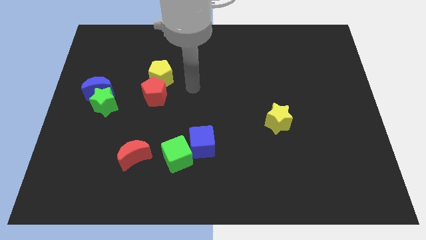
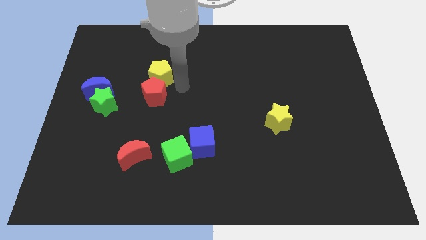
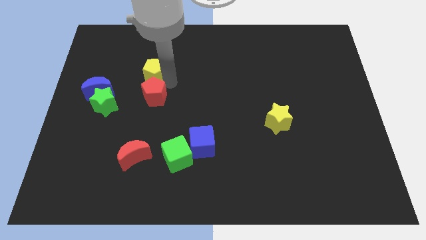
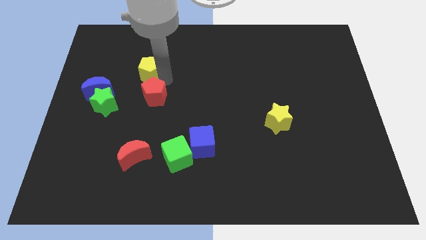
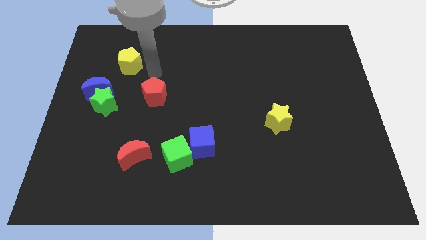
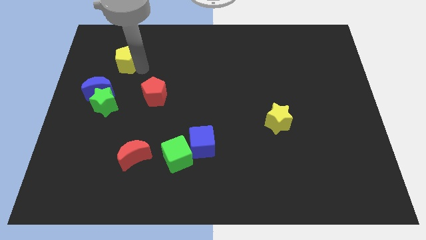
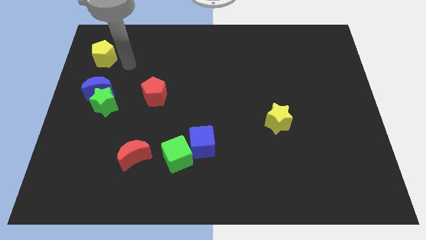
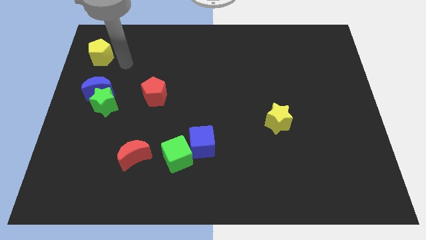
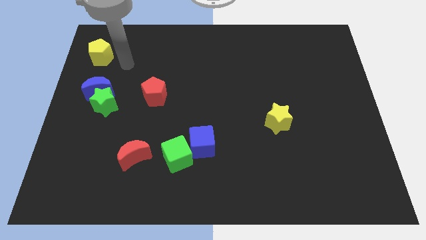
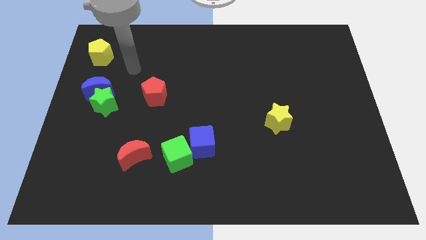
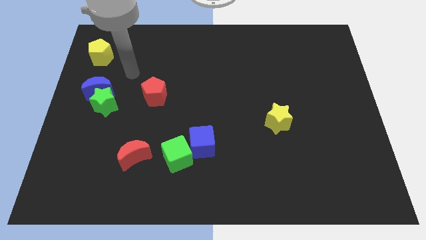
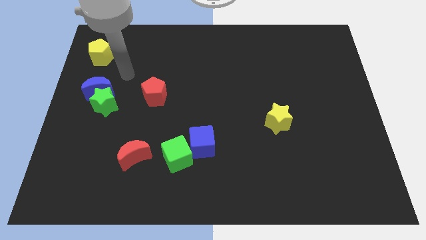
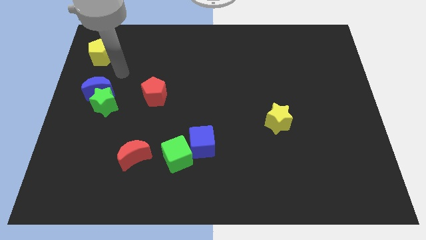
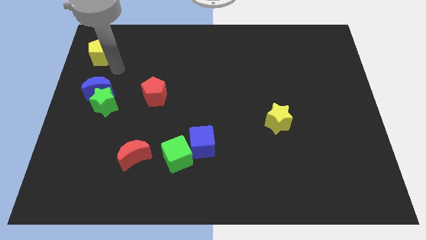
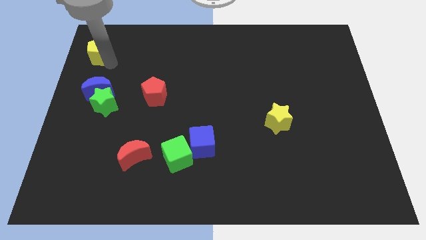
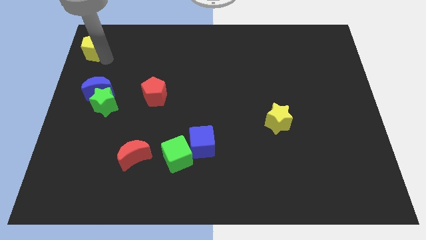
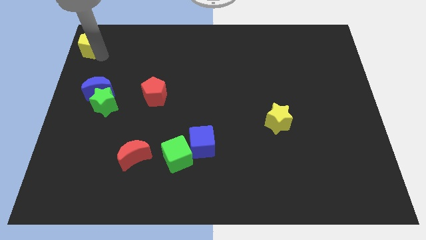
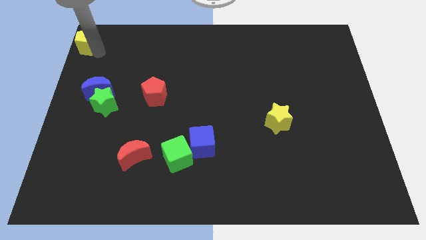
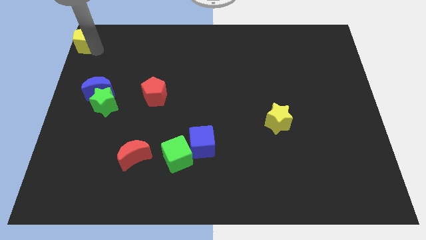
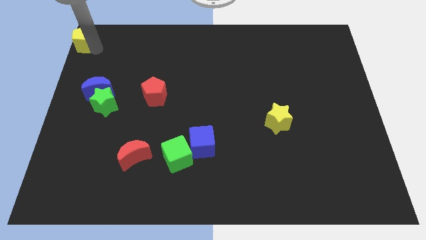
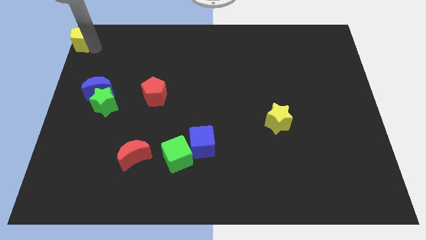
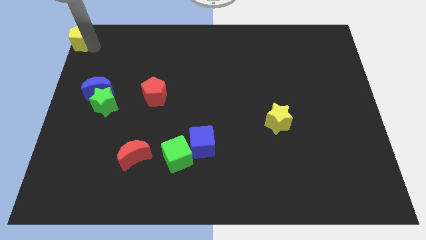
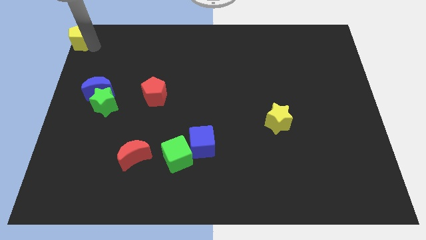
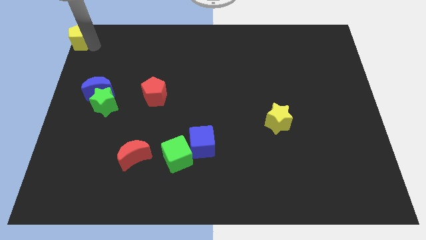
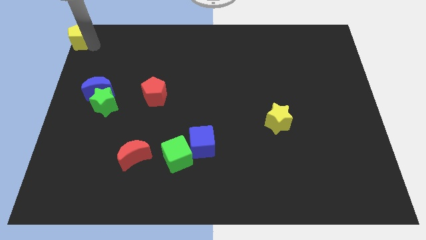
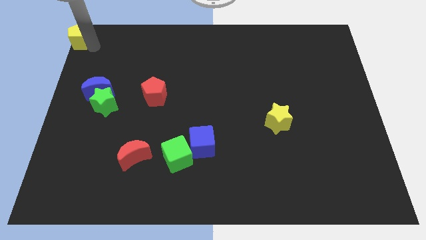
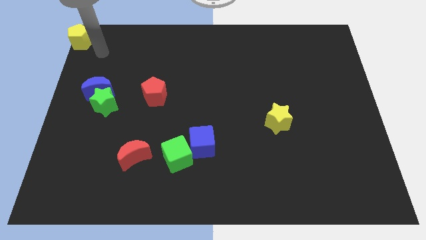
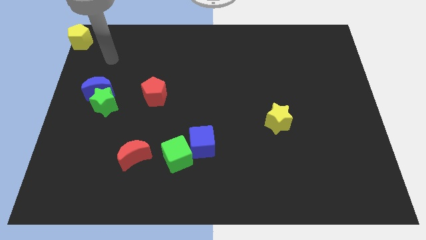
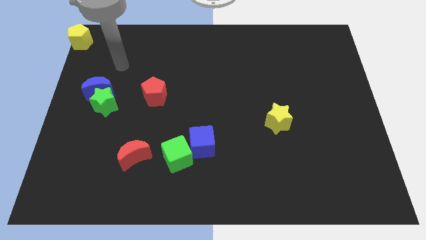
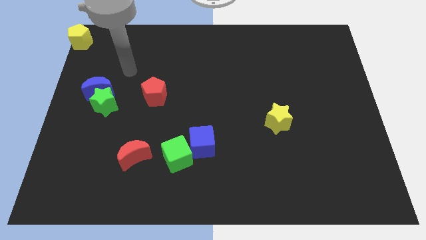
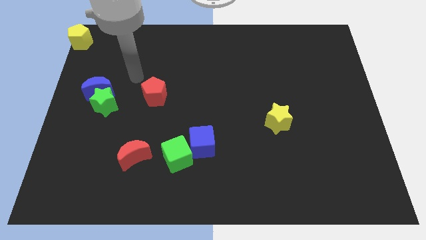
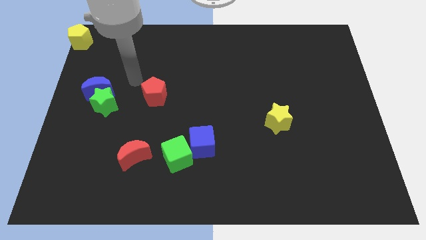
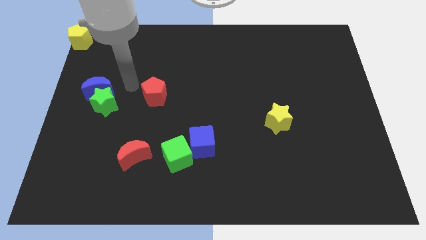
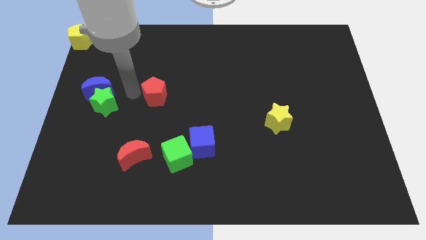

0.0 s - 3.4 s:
place the yellow pentagon at the top left corner of the board

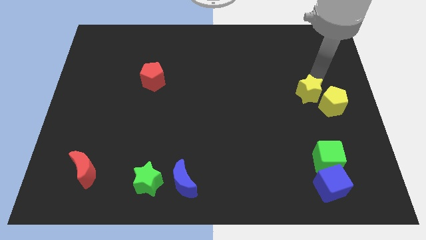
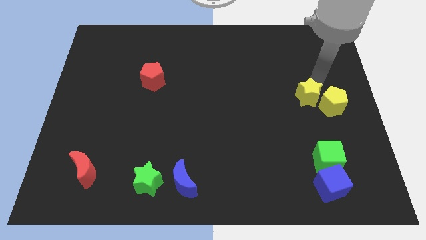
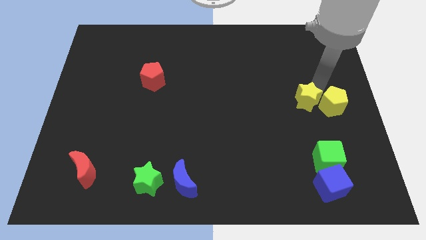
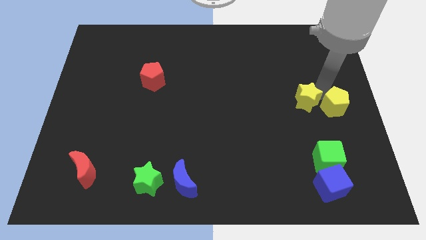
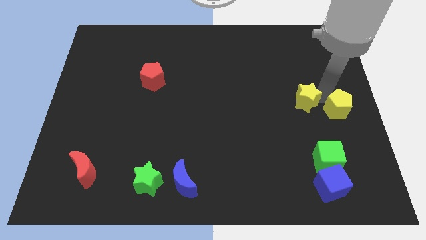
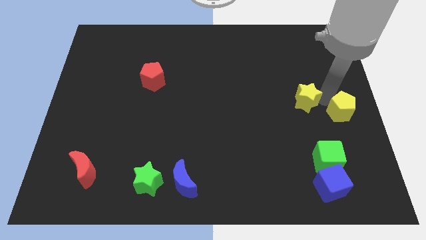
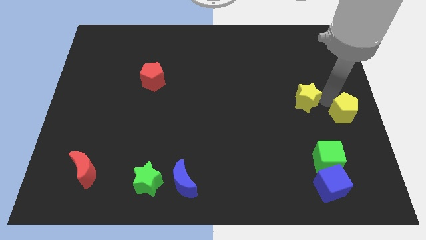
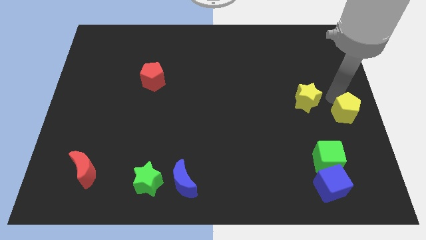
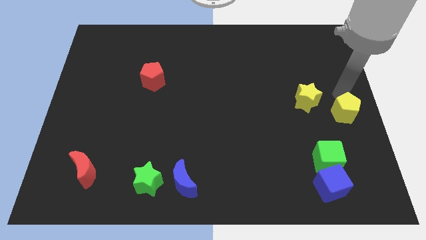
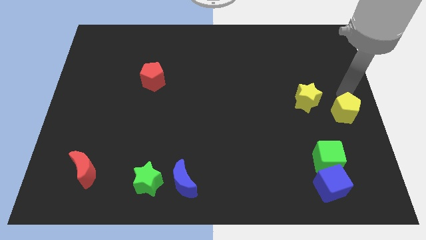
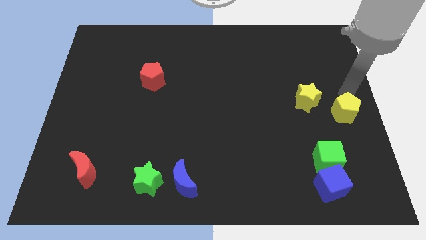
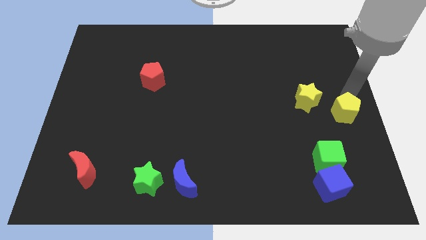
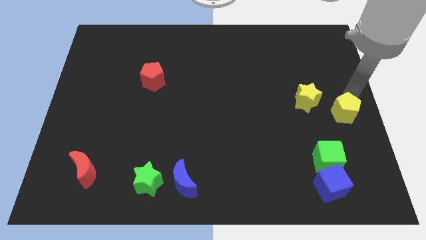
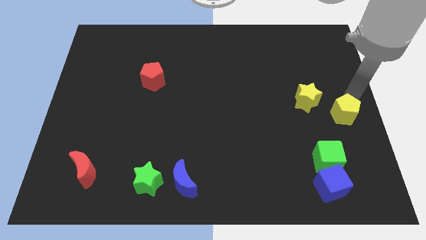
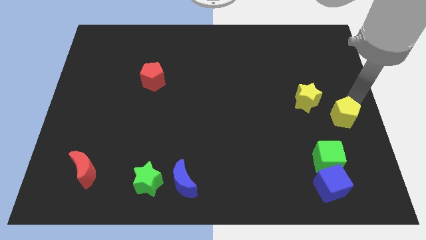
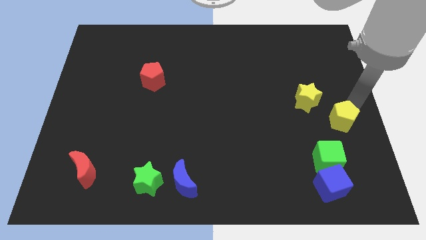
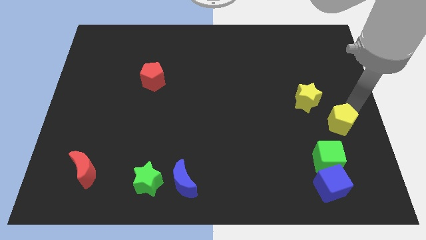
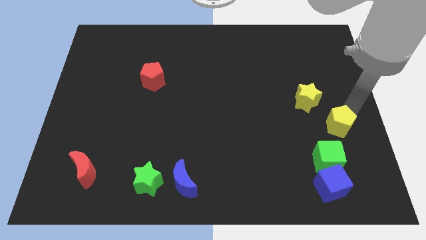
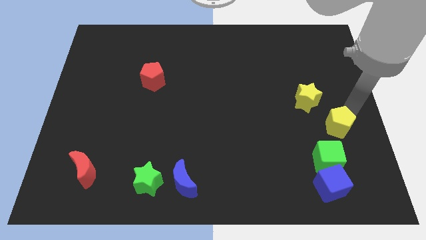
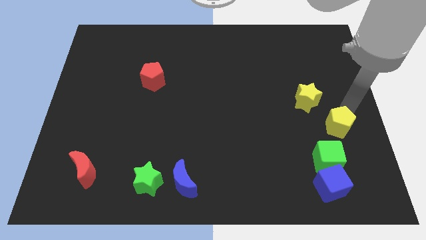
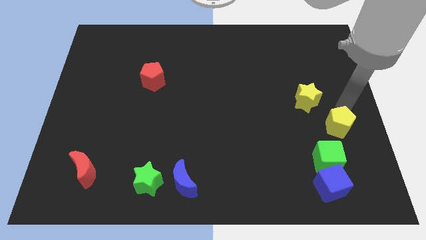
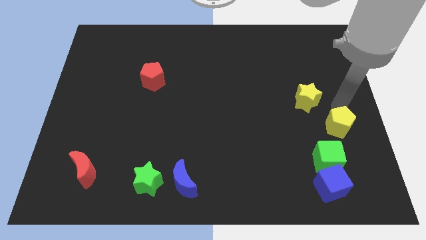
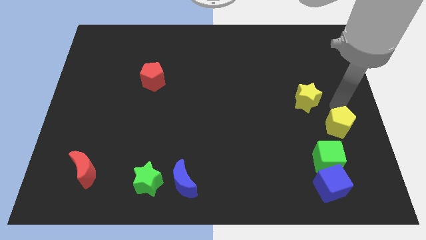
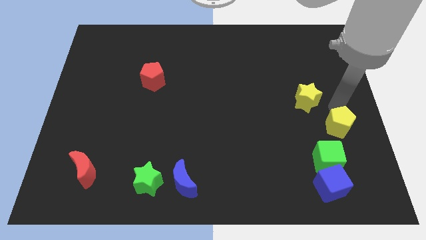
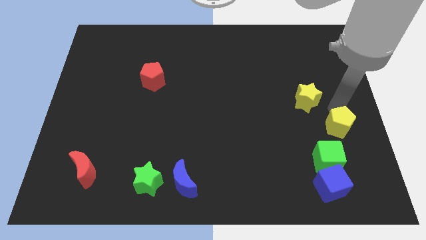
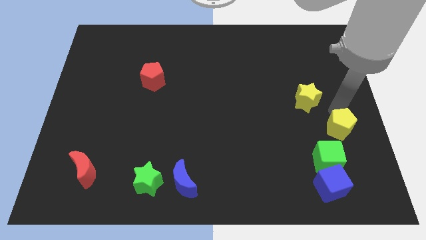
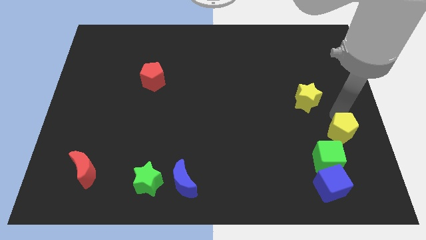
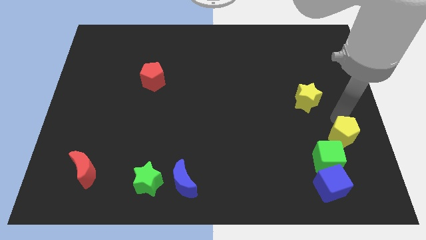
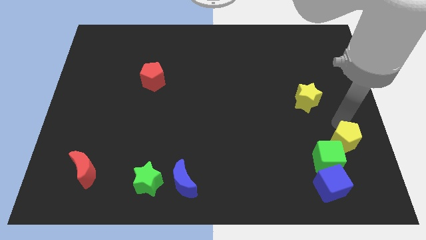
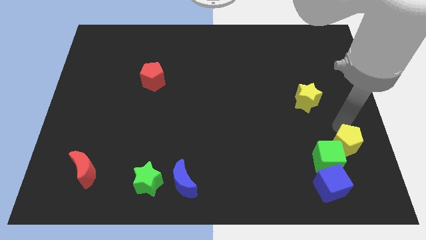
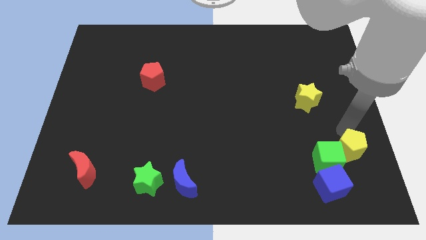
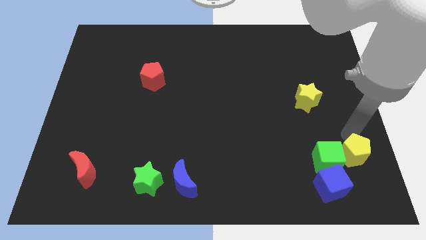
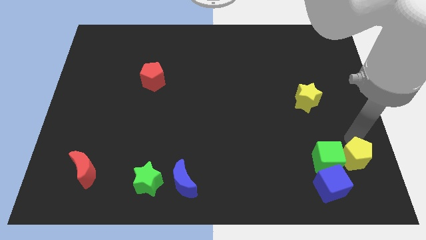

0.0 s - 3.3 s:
place the yellow pentagon right to the green cube

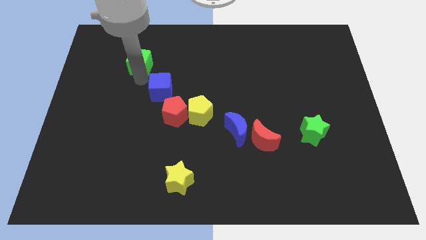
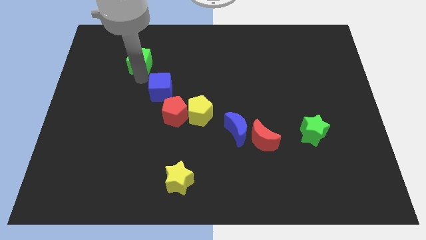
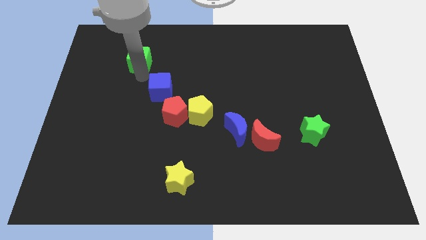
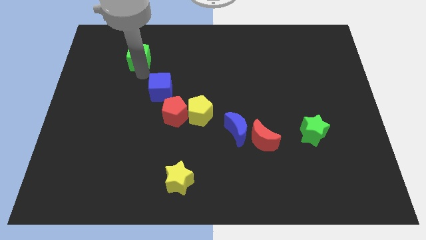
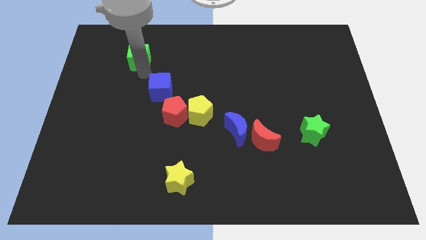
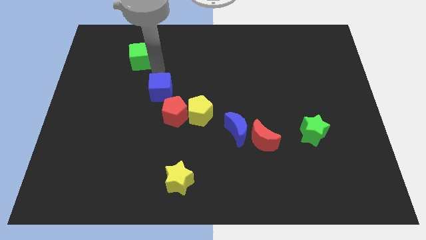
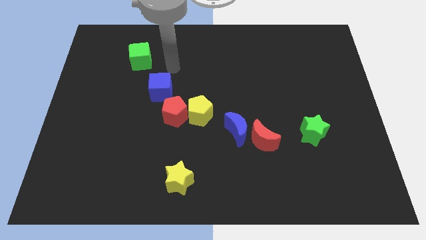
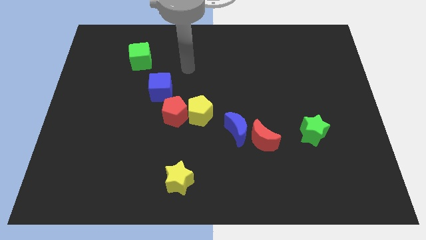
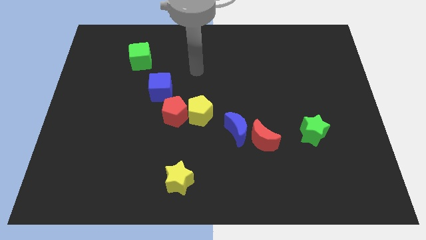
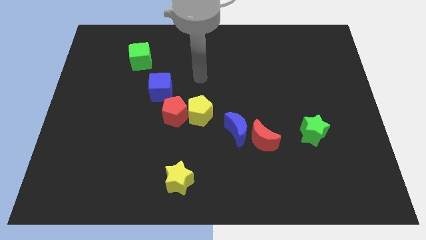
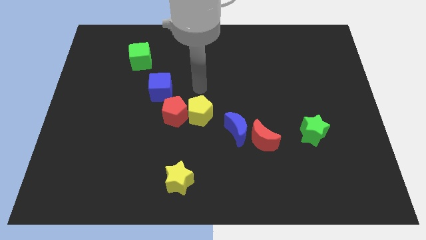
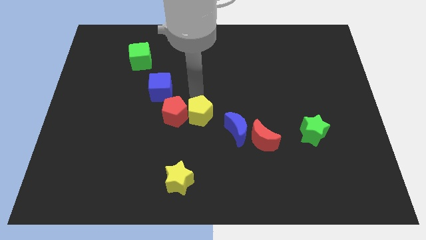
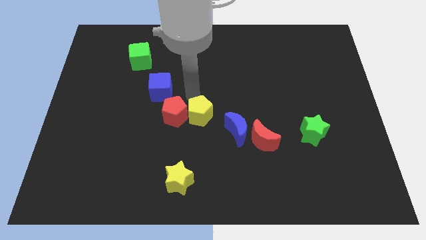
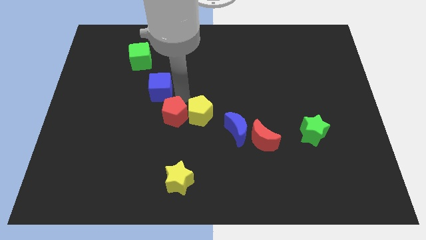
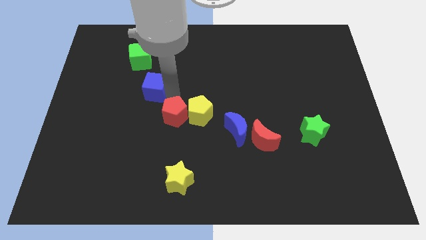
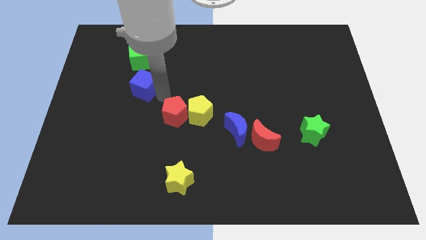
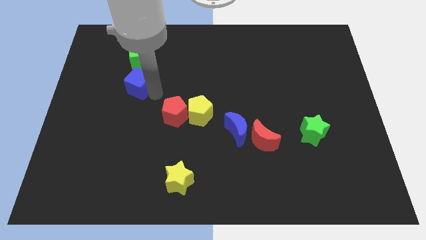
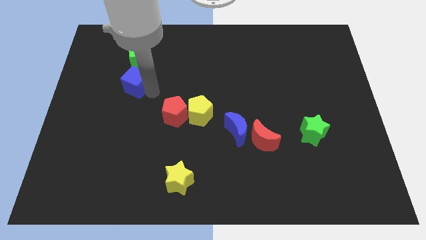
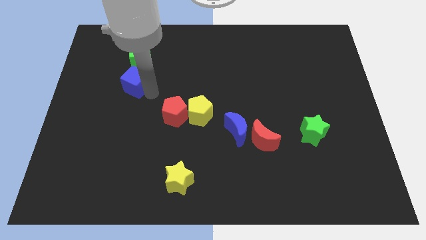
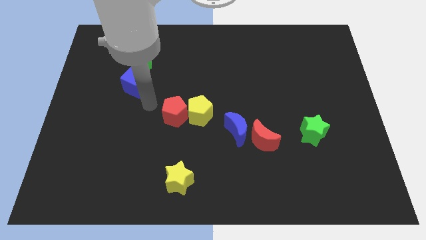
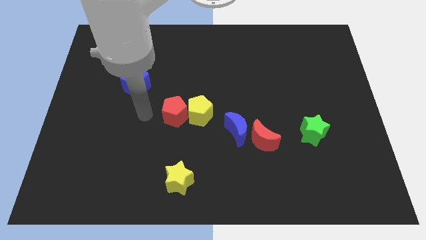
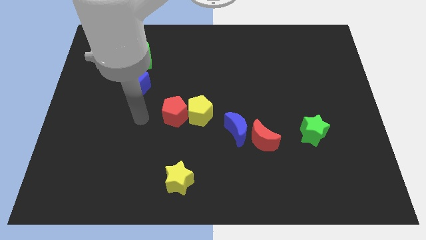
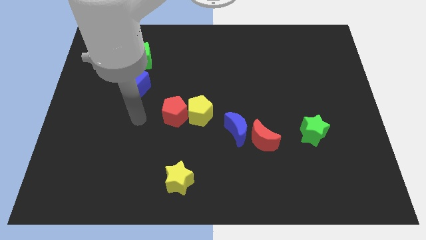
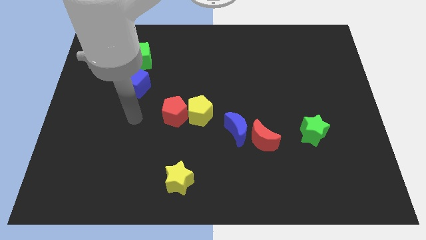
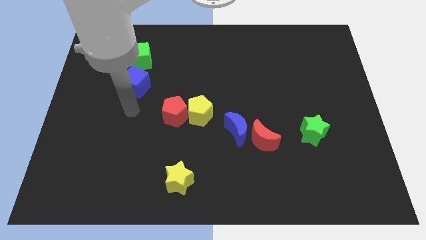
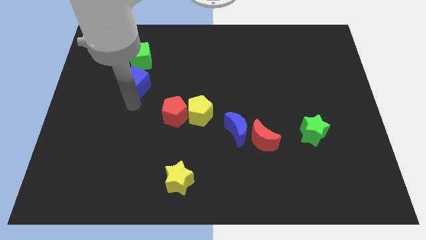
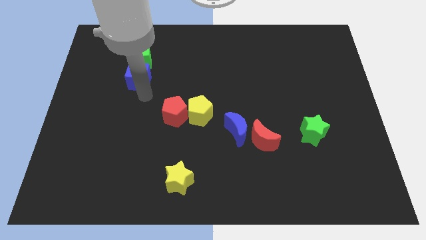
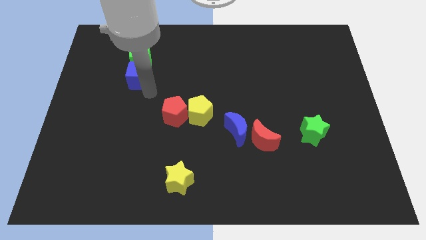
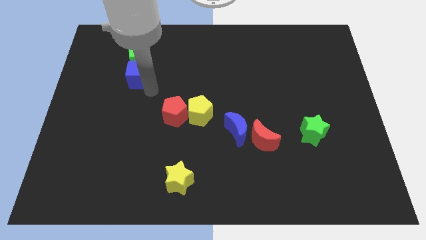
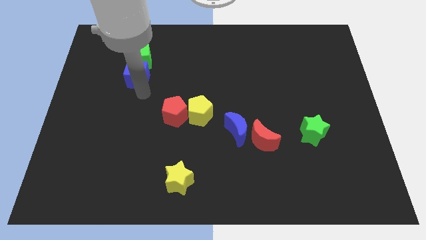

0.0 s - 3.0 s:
move the blue cube to the bottom of the green cube
